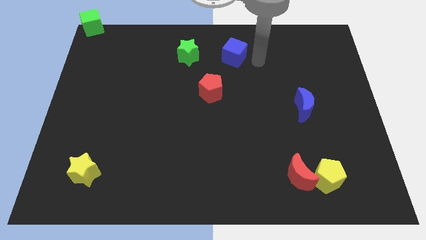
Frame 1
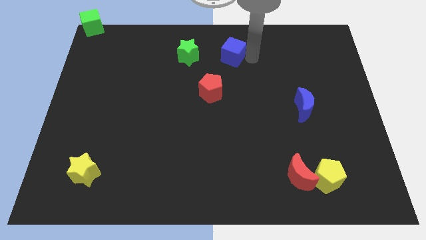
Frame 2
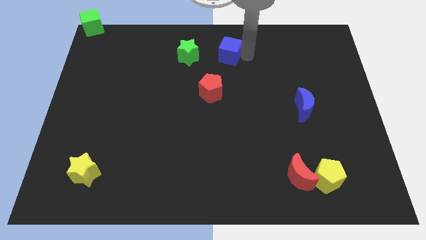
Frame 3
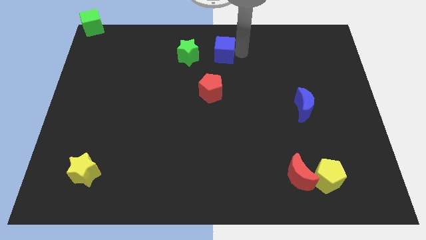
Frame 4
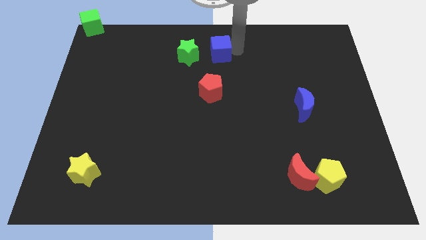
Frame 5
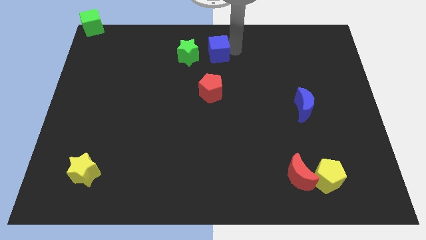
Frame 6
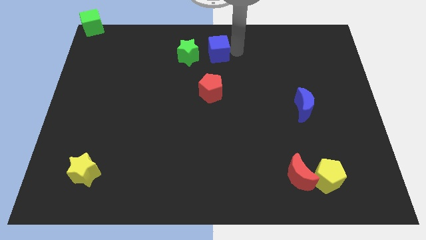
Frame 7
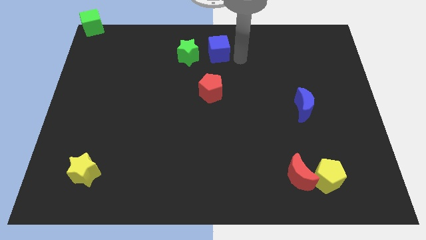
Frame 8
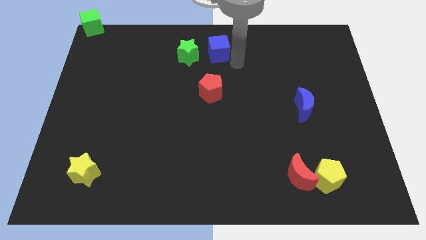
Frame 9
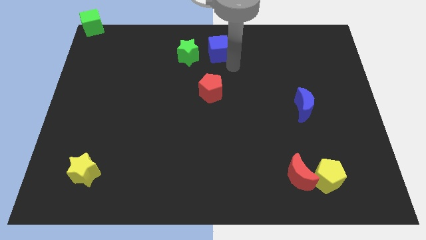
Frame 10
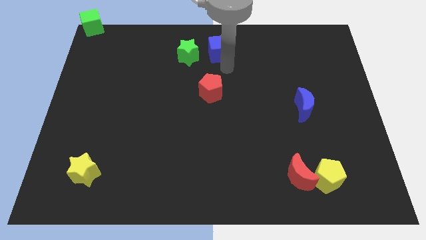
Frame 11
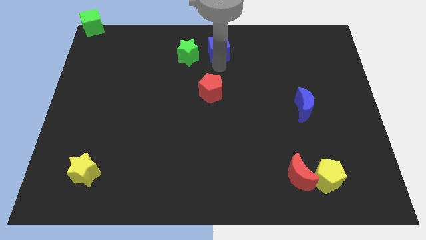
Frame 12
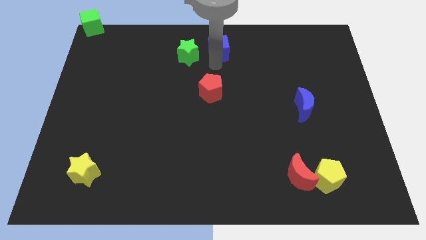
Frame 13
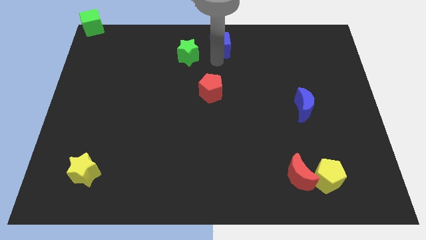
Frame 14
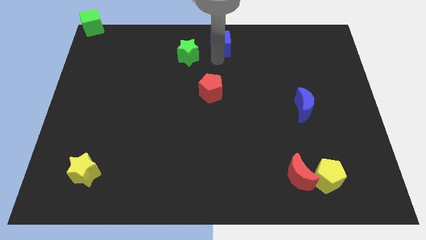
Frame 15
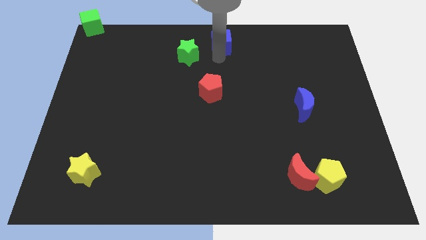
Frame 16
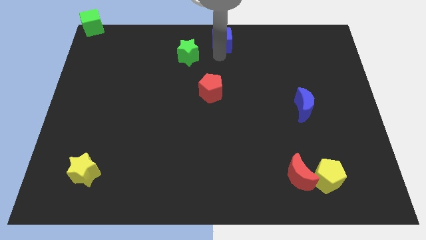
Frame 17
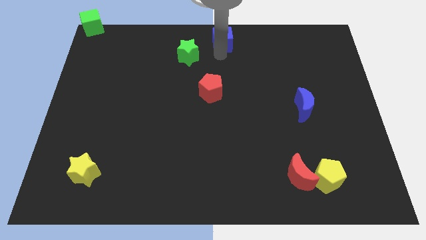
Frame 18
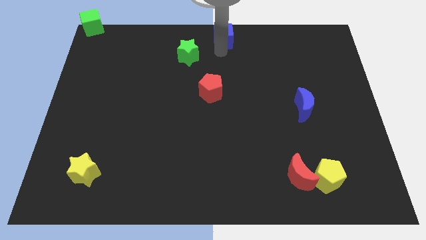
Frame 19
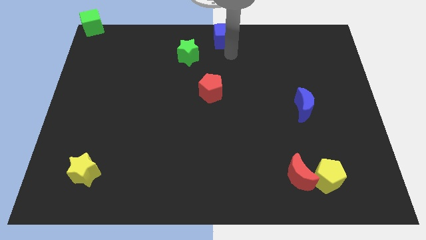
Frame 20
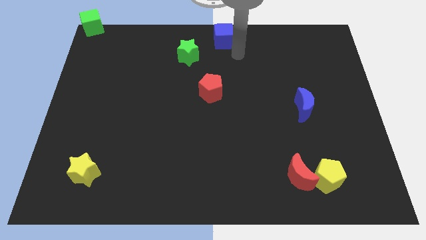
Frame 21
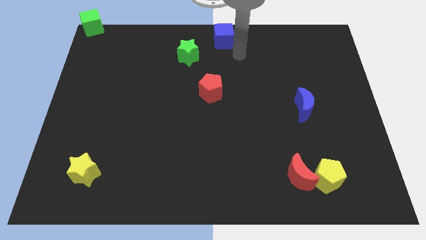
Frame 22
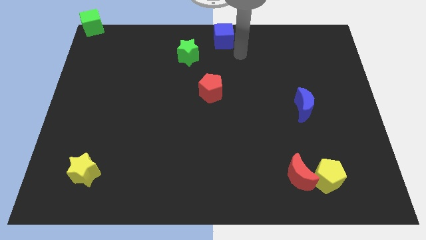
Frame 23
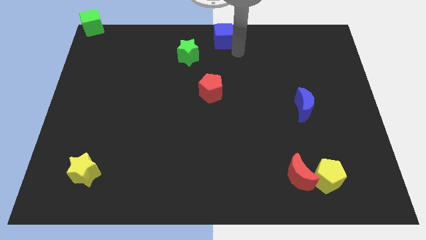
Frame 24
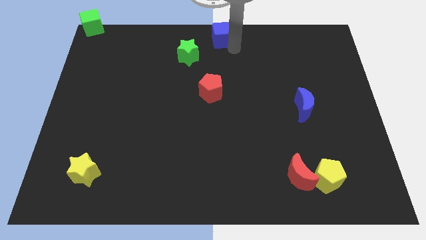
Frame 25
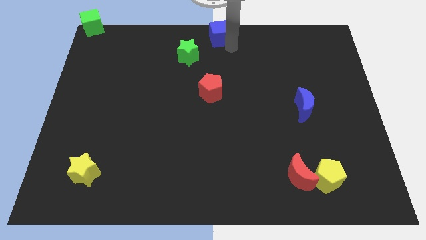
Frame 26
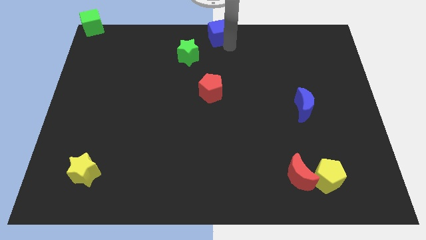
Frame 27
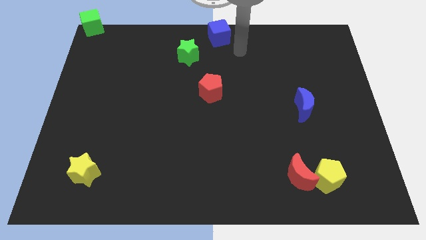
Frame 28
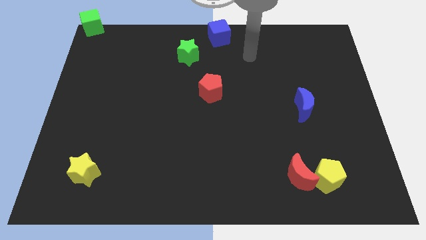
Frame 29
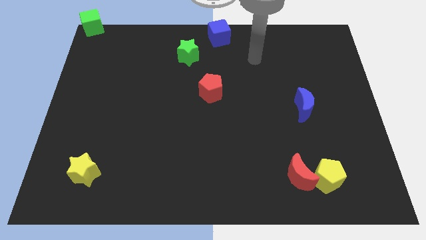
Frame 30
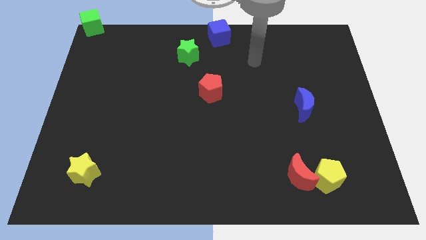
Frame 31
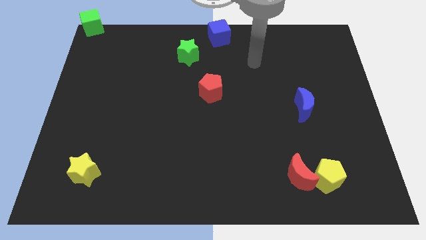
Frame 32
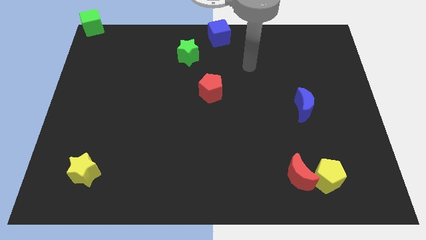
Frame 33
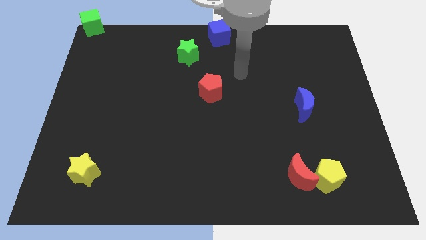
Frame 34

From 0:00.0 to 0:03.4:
push blue cube to the top of the board

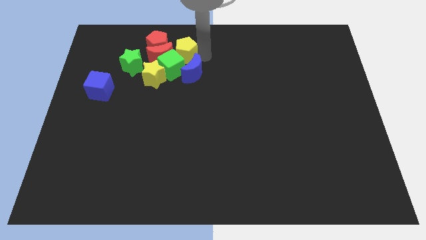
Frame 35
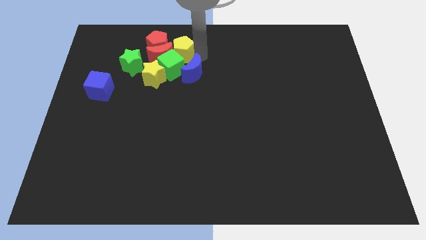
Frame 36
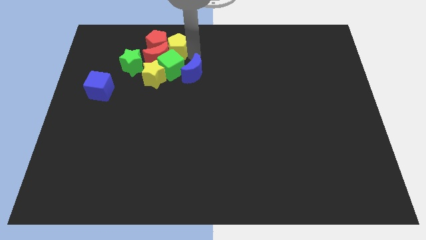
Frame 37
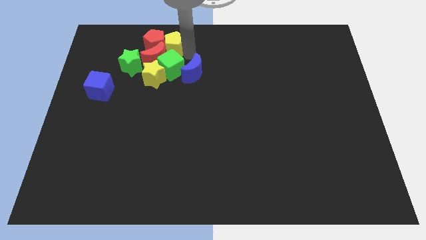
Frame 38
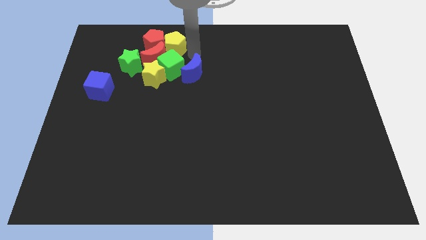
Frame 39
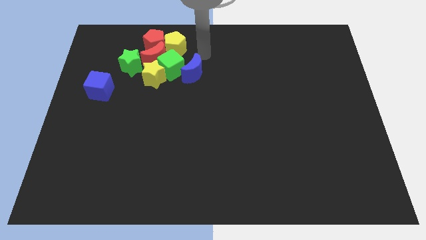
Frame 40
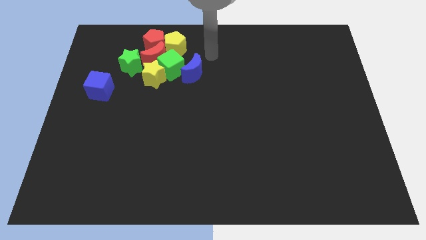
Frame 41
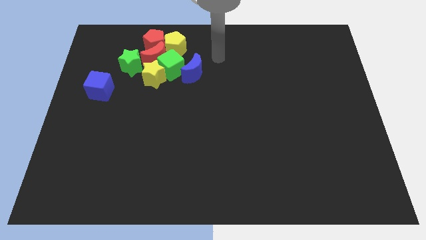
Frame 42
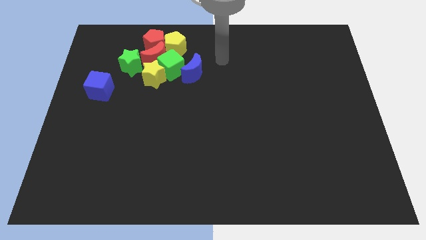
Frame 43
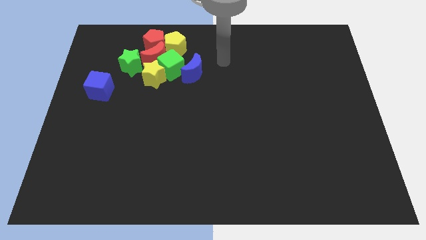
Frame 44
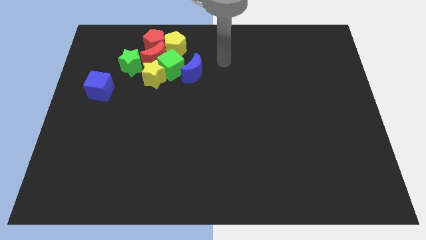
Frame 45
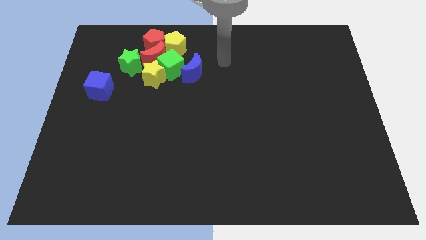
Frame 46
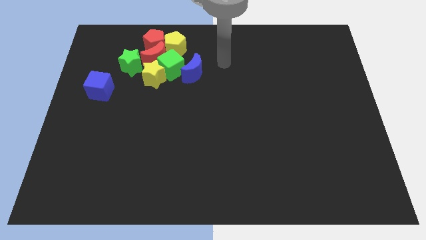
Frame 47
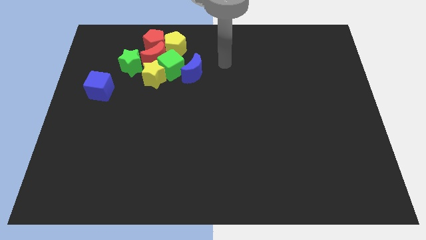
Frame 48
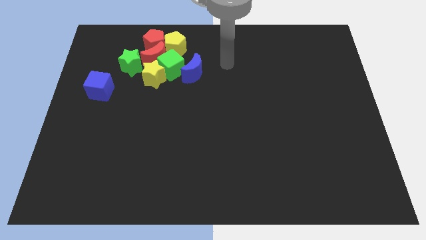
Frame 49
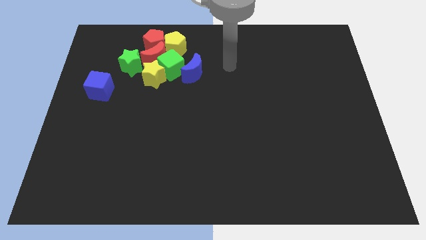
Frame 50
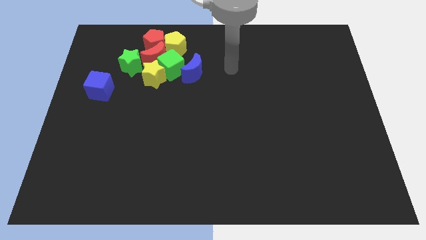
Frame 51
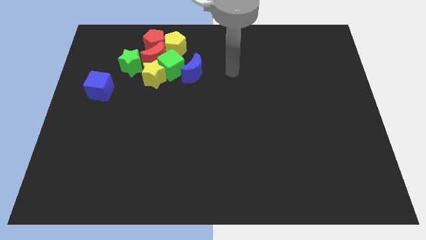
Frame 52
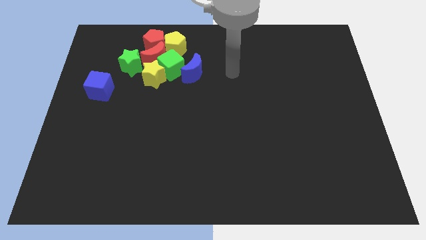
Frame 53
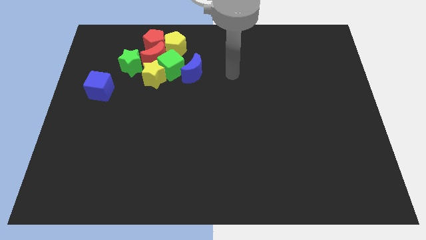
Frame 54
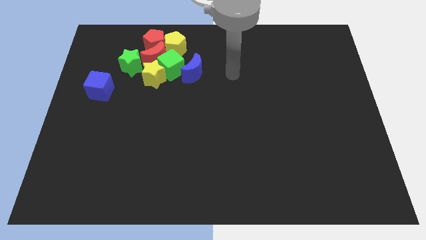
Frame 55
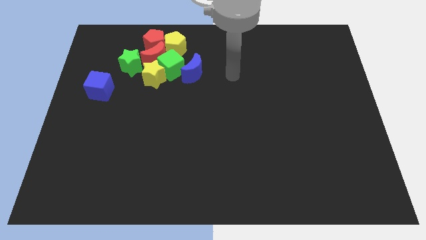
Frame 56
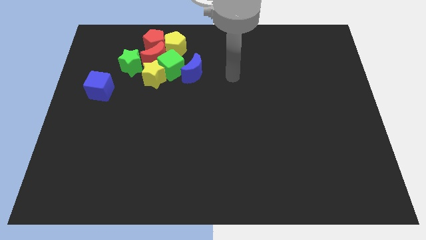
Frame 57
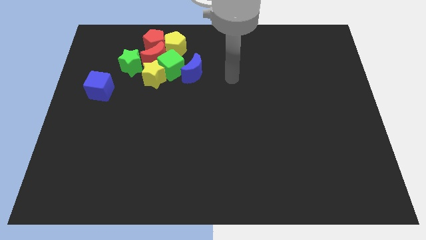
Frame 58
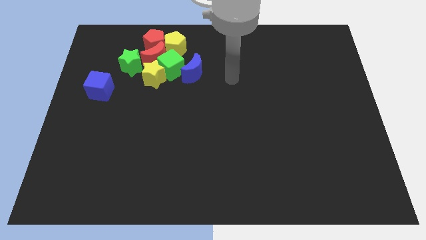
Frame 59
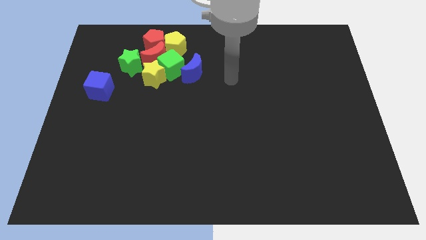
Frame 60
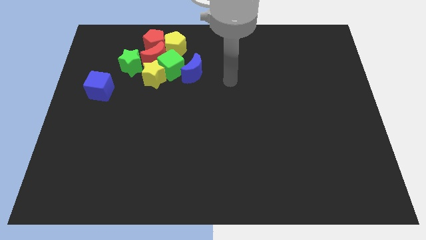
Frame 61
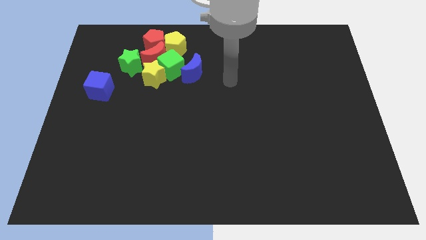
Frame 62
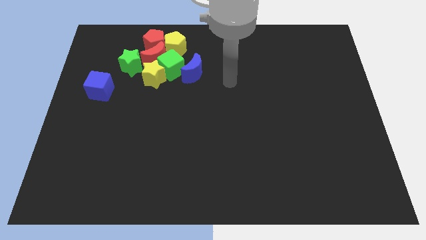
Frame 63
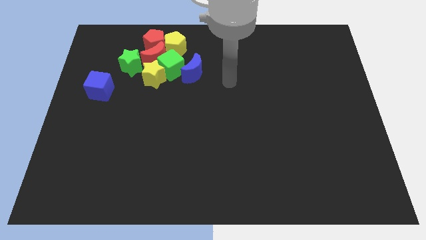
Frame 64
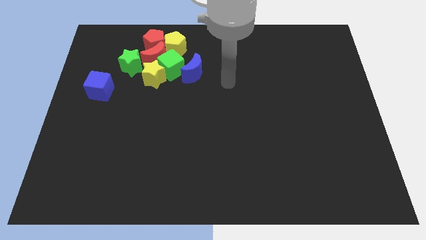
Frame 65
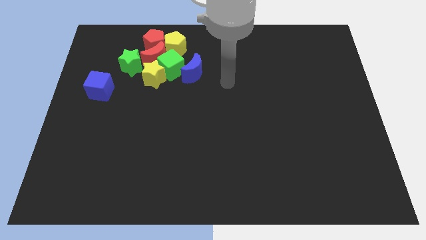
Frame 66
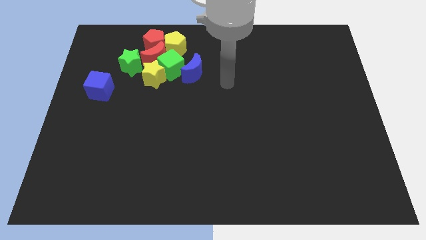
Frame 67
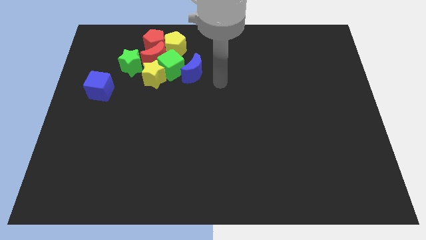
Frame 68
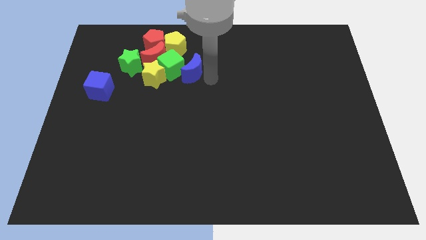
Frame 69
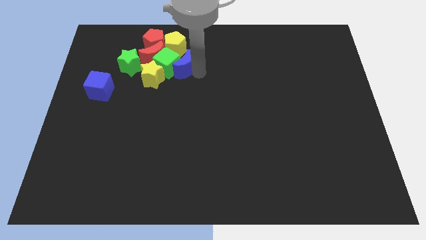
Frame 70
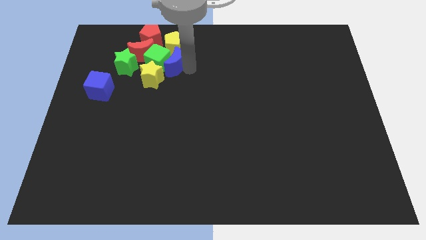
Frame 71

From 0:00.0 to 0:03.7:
place the arm right to the blue moon

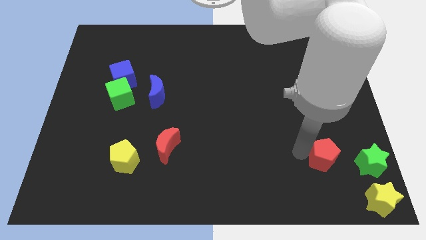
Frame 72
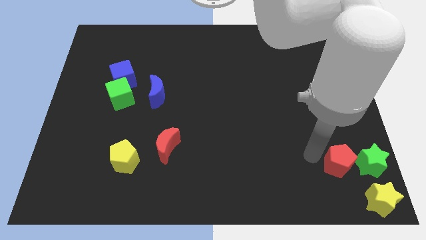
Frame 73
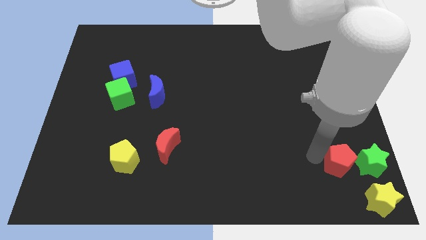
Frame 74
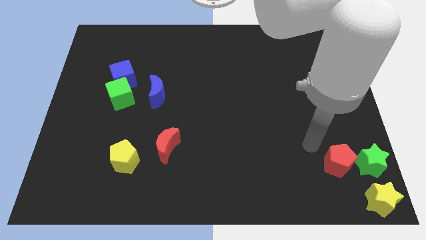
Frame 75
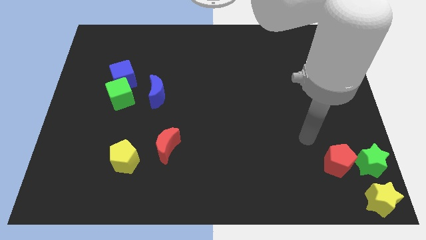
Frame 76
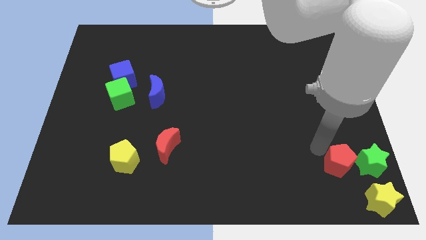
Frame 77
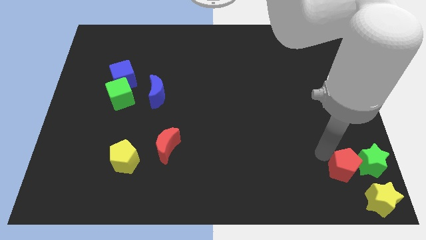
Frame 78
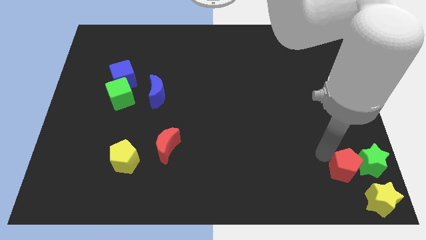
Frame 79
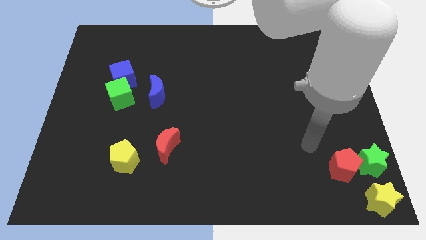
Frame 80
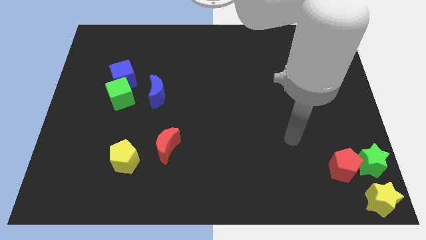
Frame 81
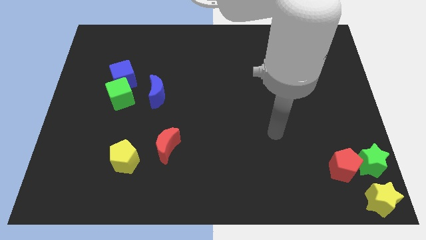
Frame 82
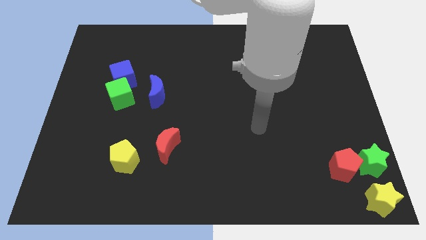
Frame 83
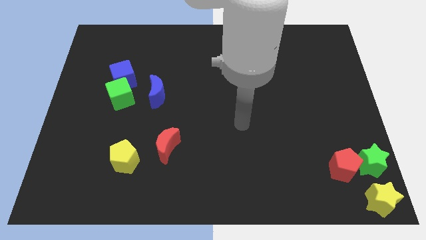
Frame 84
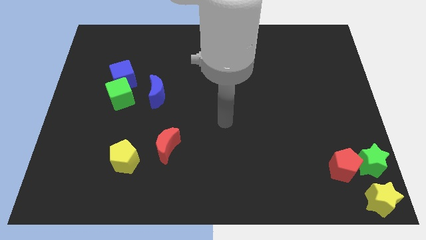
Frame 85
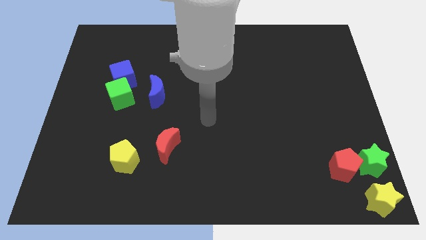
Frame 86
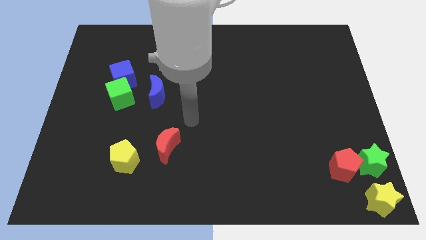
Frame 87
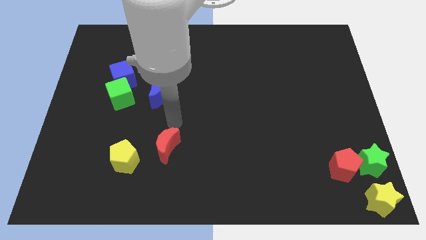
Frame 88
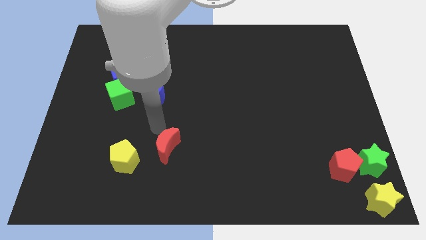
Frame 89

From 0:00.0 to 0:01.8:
push the red pentagon to the left side of the green star

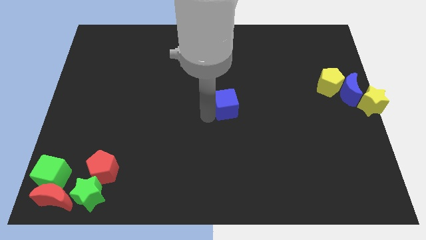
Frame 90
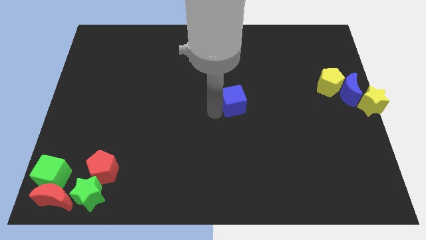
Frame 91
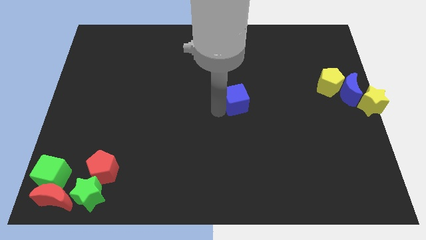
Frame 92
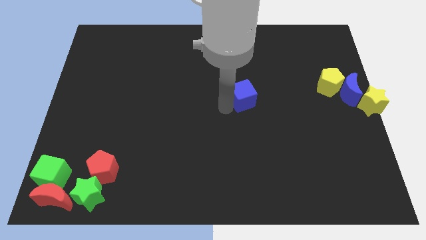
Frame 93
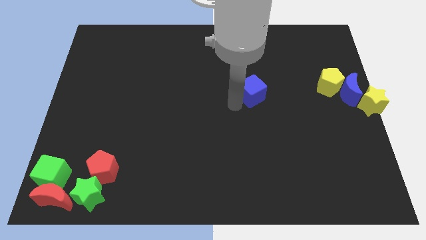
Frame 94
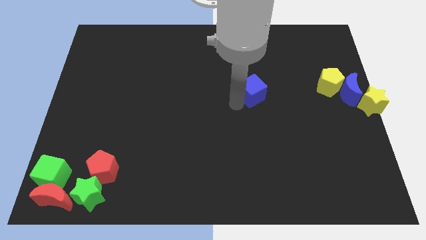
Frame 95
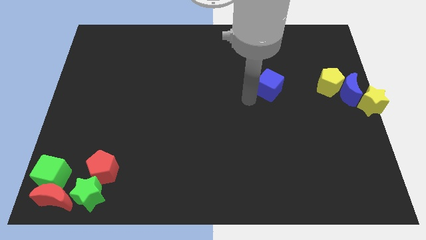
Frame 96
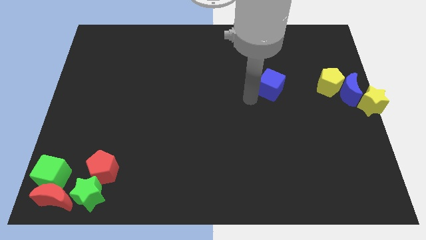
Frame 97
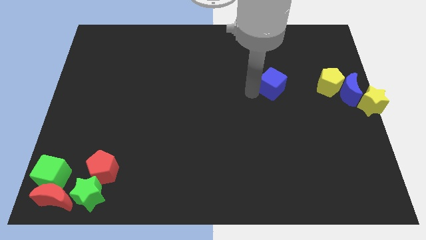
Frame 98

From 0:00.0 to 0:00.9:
move the blue cube towards the yellow pentagon
